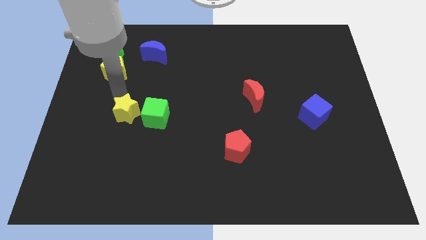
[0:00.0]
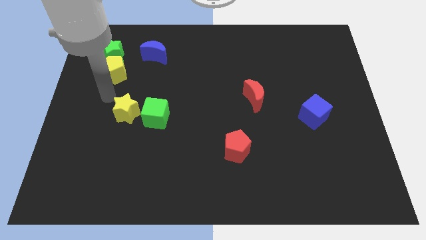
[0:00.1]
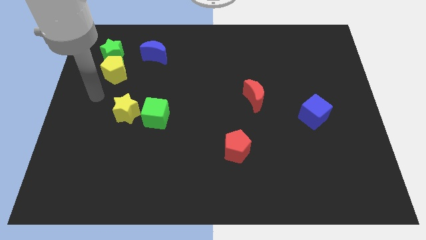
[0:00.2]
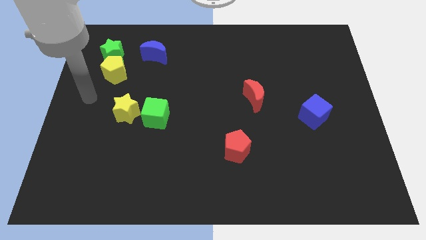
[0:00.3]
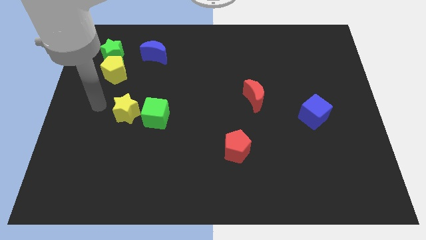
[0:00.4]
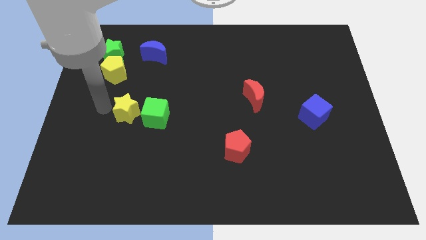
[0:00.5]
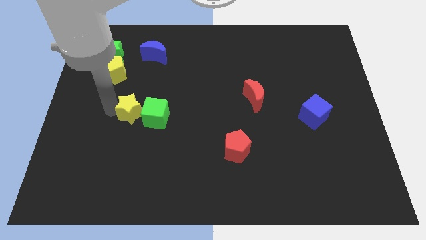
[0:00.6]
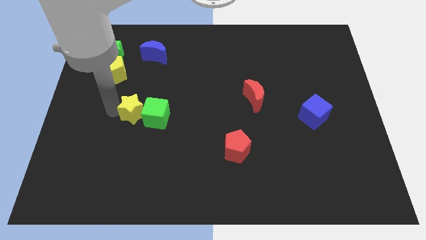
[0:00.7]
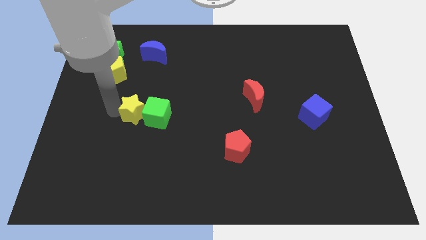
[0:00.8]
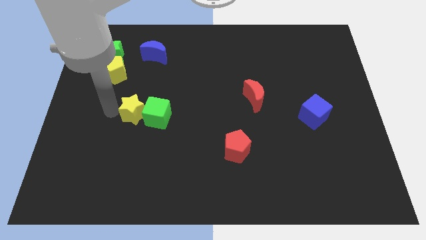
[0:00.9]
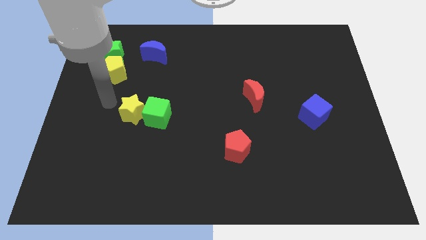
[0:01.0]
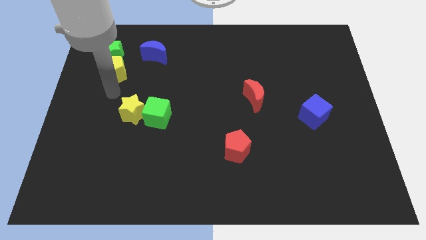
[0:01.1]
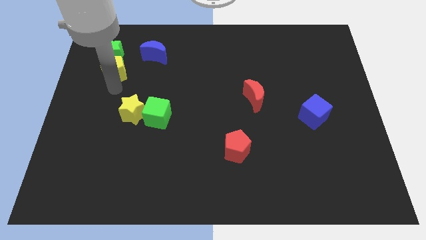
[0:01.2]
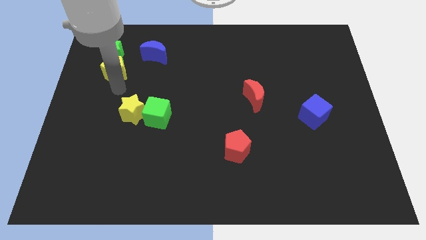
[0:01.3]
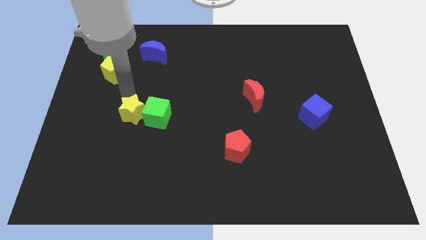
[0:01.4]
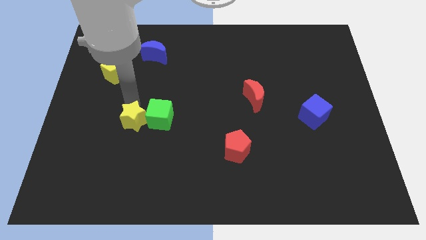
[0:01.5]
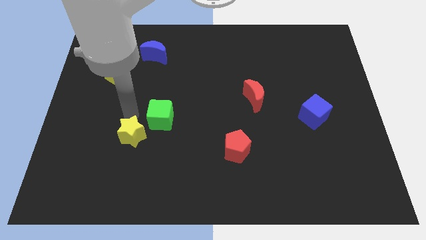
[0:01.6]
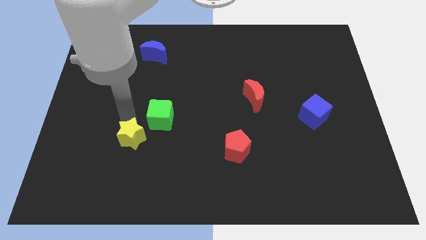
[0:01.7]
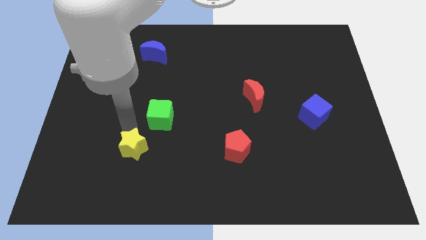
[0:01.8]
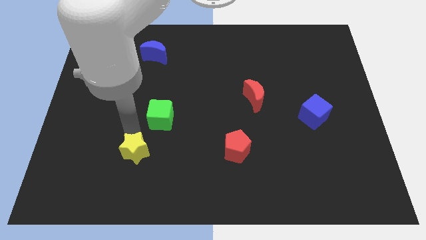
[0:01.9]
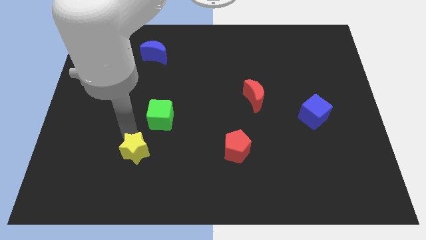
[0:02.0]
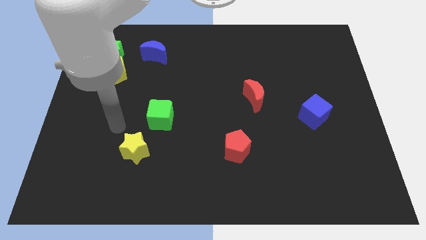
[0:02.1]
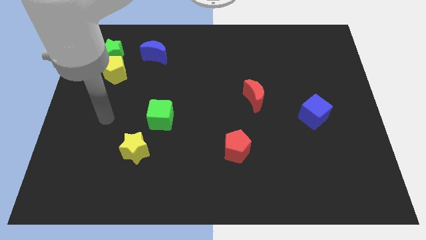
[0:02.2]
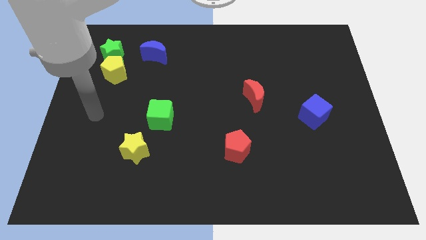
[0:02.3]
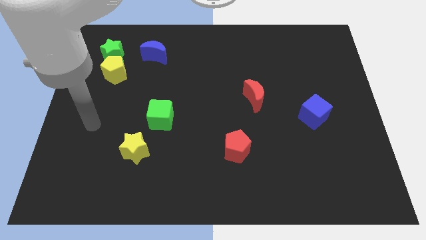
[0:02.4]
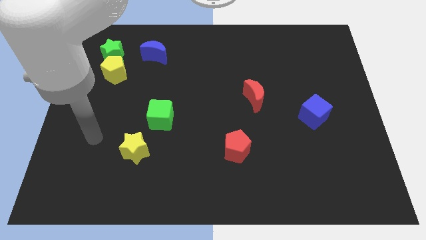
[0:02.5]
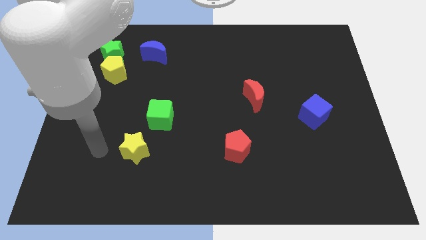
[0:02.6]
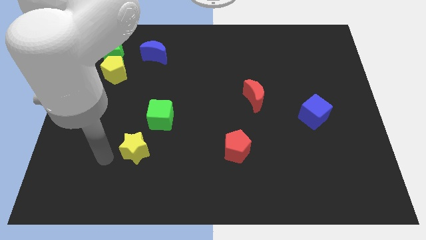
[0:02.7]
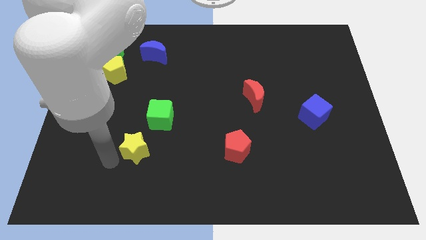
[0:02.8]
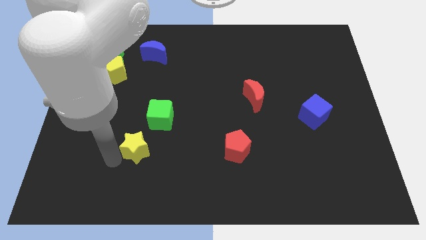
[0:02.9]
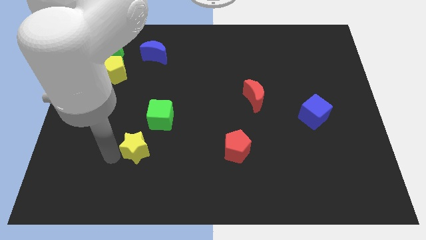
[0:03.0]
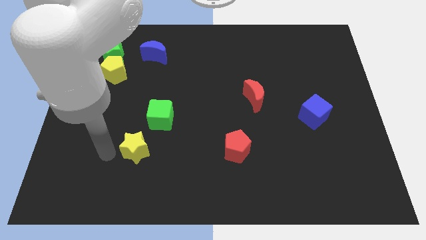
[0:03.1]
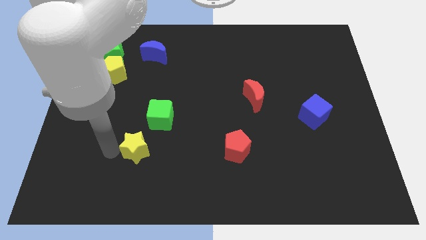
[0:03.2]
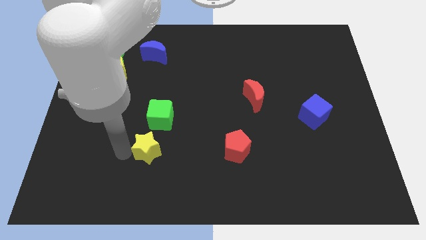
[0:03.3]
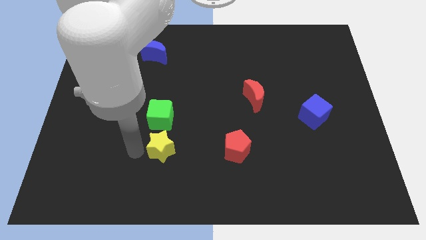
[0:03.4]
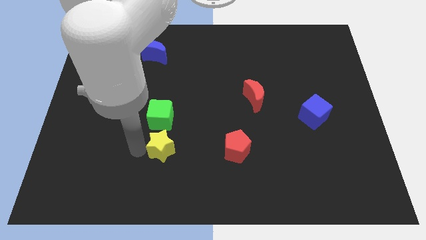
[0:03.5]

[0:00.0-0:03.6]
bring the yellow star at the bottom side of the green cube

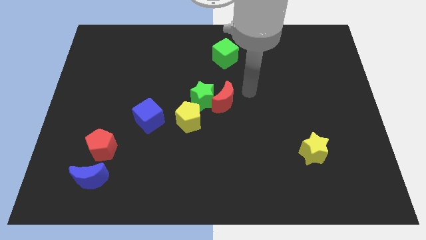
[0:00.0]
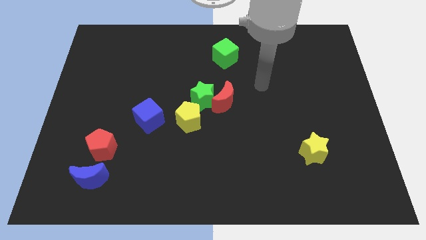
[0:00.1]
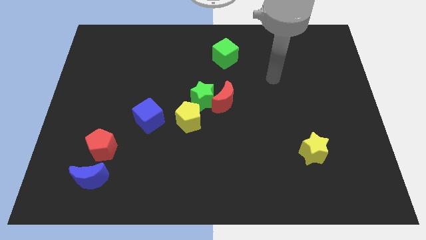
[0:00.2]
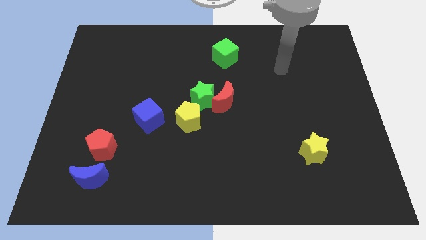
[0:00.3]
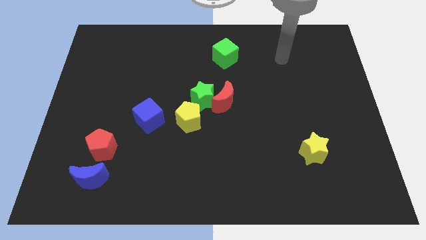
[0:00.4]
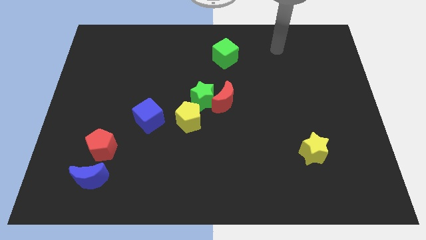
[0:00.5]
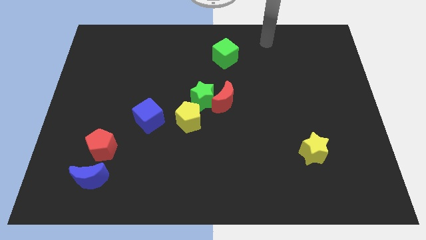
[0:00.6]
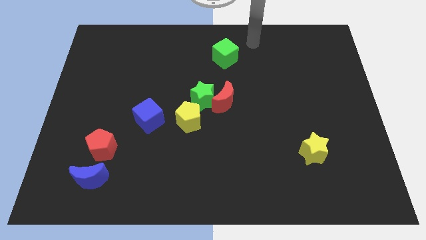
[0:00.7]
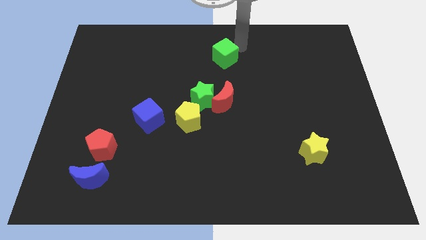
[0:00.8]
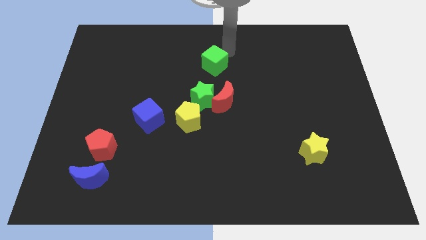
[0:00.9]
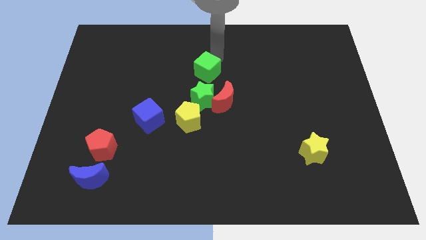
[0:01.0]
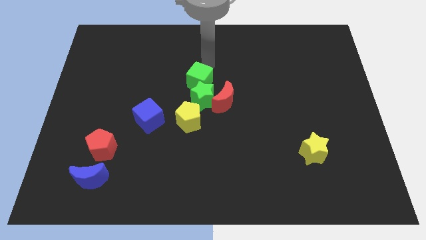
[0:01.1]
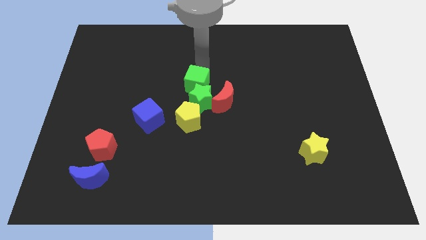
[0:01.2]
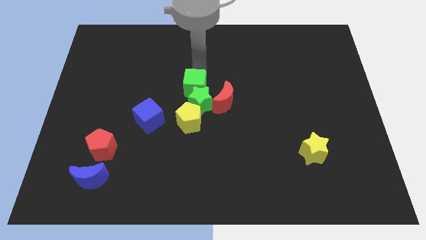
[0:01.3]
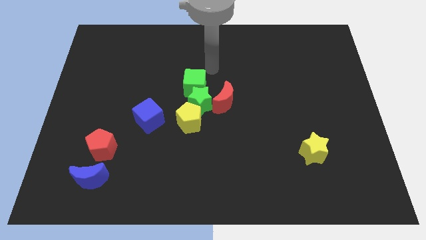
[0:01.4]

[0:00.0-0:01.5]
push the green cube into the top side of the green star

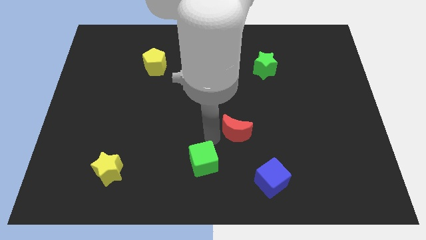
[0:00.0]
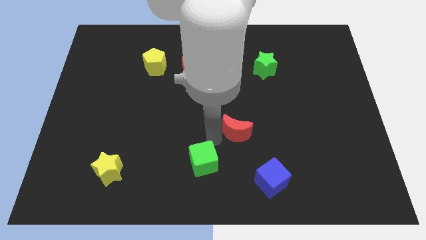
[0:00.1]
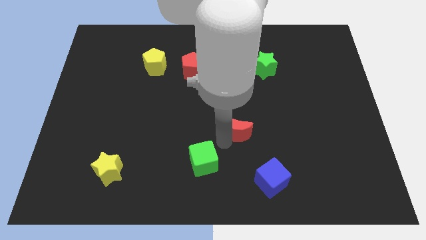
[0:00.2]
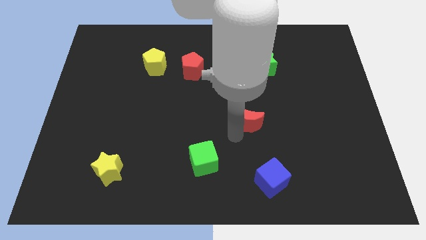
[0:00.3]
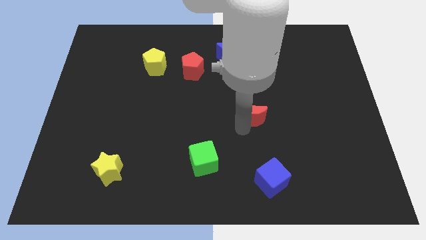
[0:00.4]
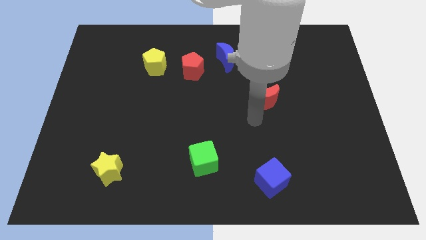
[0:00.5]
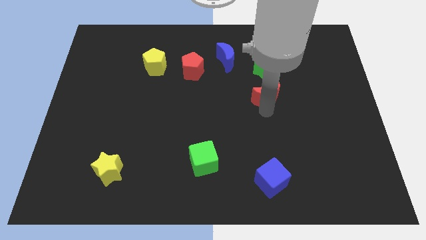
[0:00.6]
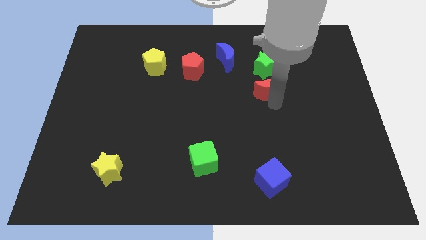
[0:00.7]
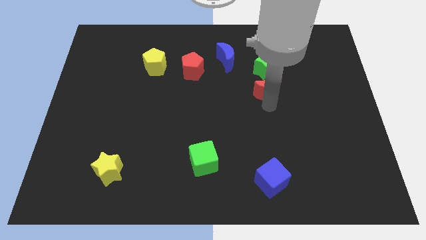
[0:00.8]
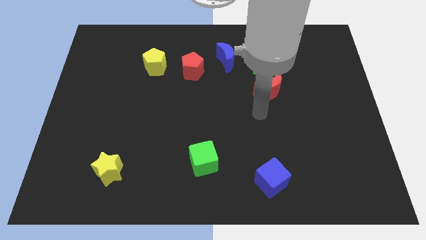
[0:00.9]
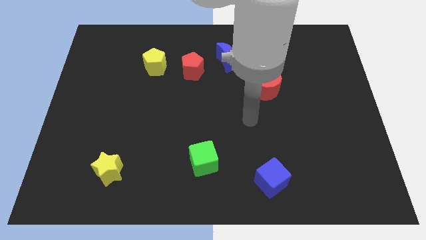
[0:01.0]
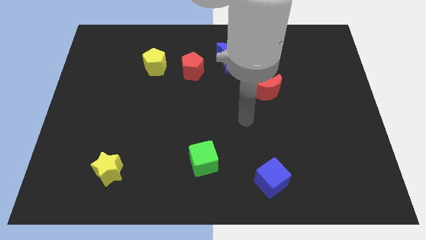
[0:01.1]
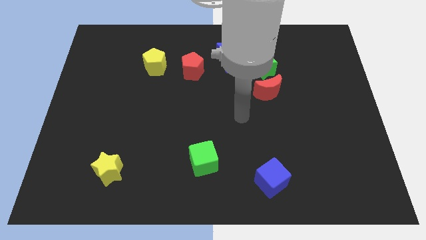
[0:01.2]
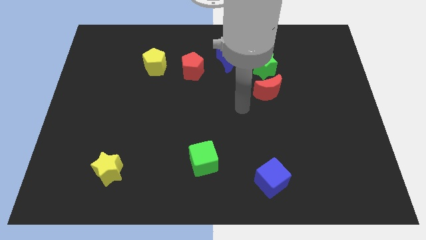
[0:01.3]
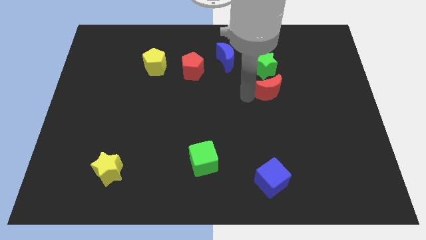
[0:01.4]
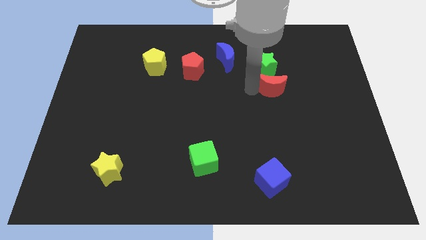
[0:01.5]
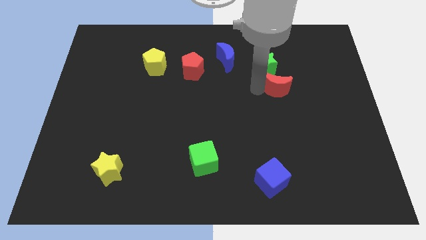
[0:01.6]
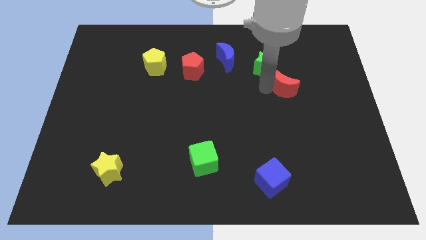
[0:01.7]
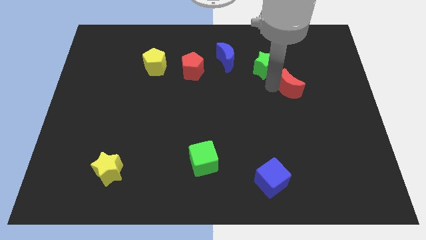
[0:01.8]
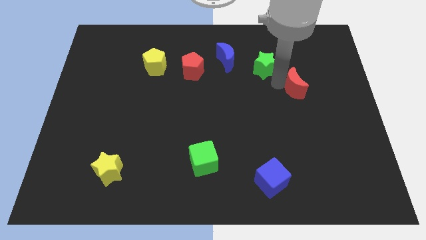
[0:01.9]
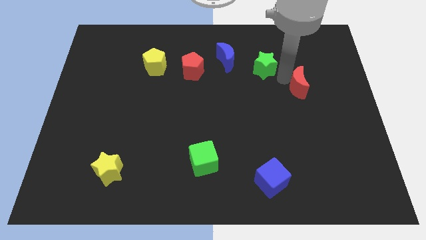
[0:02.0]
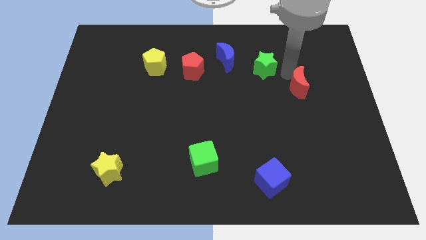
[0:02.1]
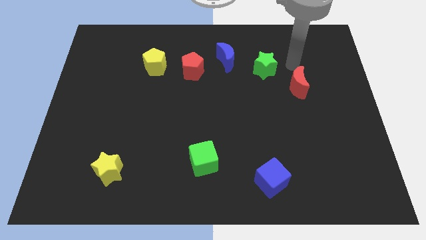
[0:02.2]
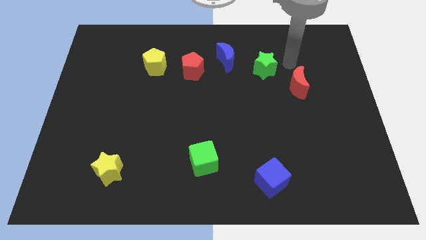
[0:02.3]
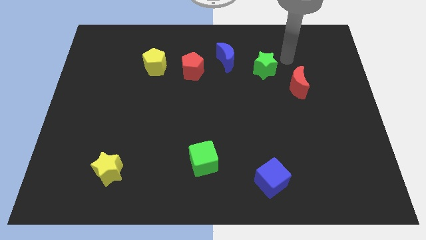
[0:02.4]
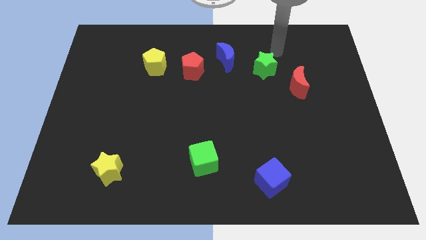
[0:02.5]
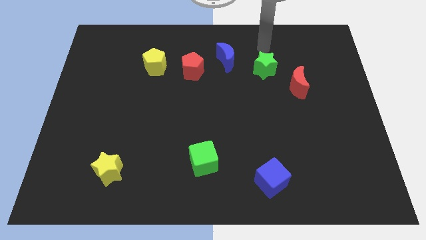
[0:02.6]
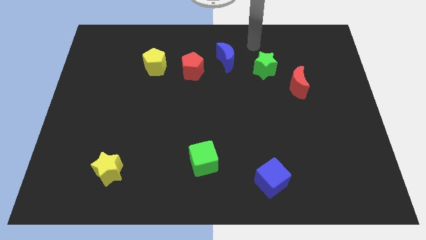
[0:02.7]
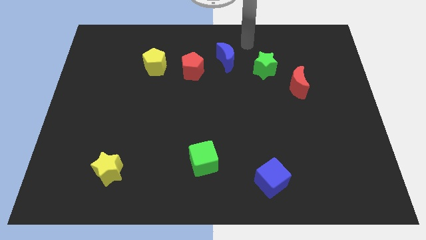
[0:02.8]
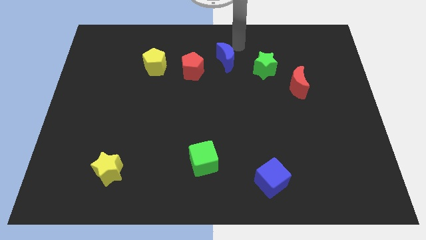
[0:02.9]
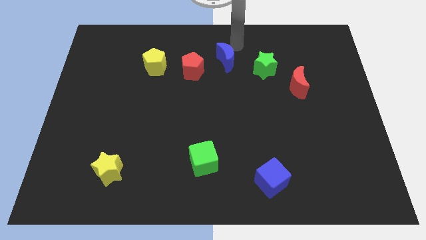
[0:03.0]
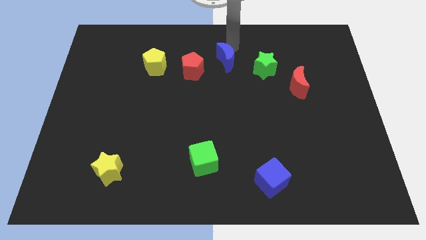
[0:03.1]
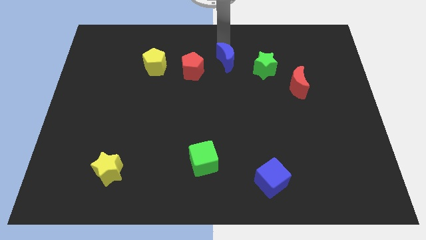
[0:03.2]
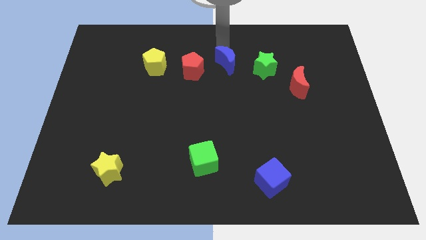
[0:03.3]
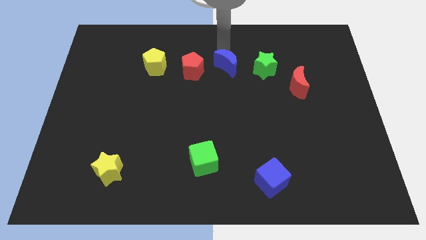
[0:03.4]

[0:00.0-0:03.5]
place the red moon to the right of the green star

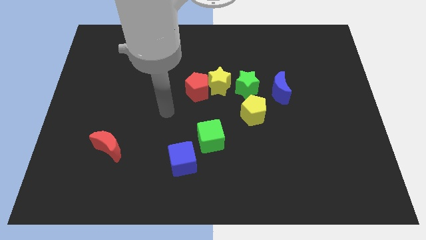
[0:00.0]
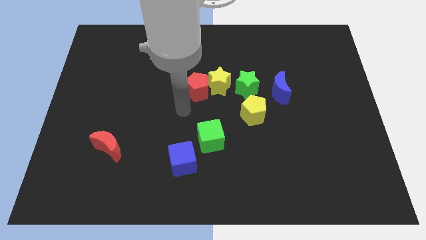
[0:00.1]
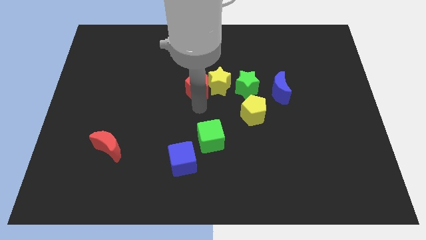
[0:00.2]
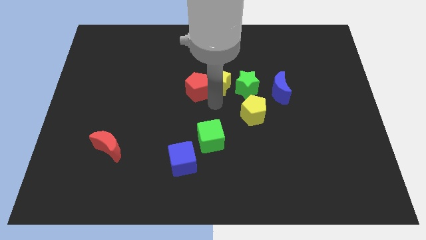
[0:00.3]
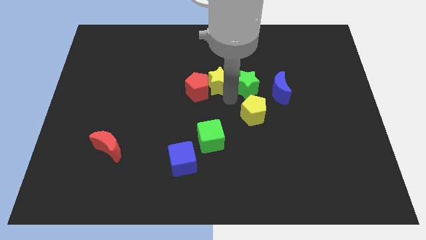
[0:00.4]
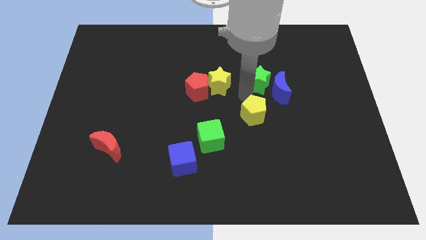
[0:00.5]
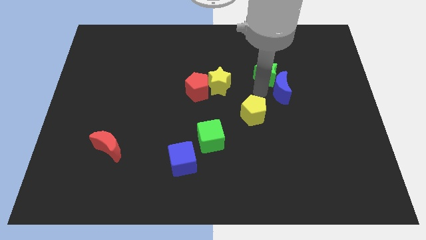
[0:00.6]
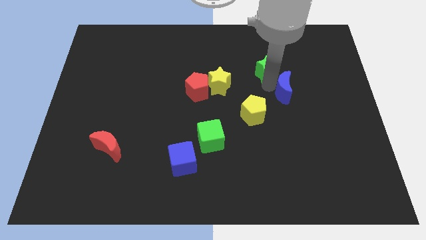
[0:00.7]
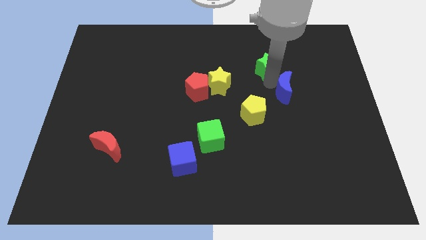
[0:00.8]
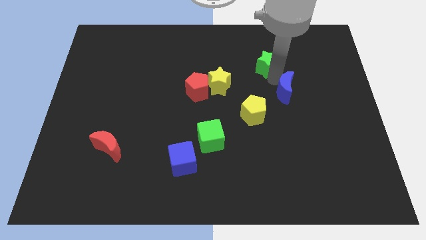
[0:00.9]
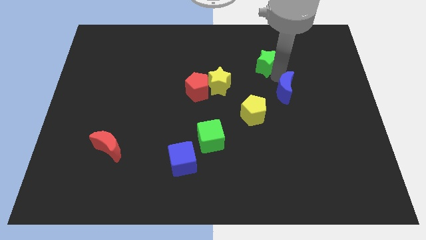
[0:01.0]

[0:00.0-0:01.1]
move the green star to the top left of the blue moon
